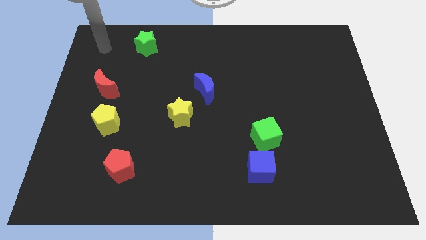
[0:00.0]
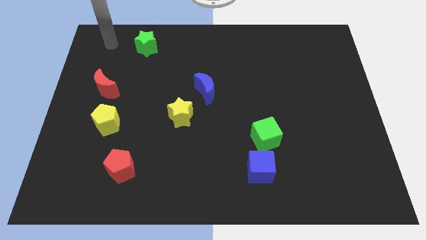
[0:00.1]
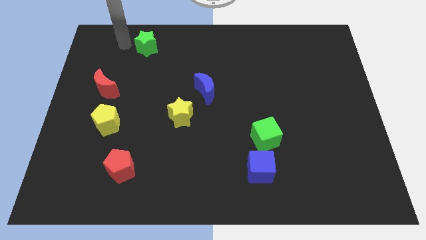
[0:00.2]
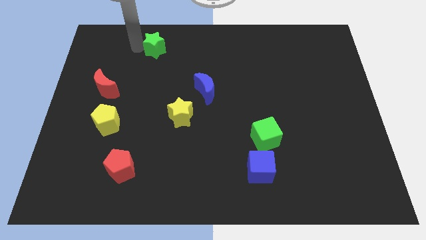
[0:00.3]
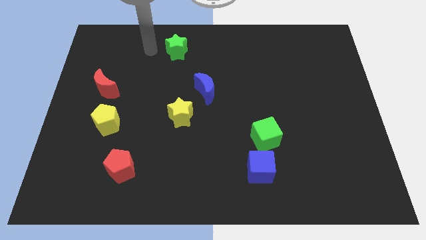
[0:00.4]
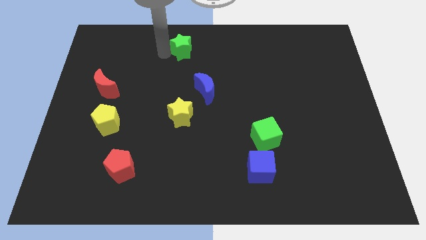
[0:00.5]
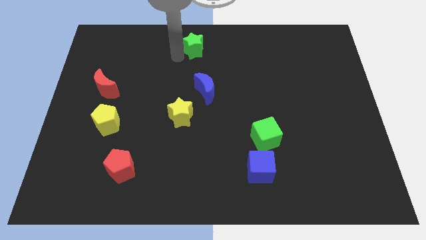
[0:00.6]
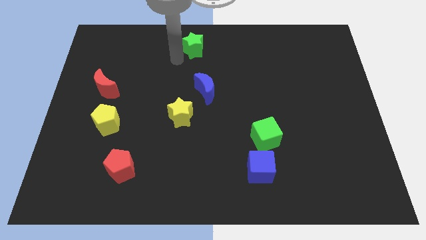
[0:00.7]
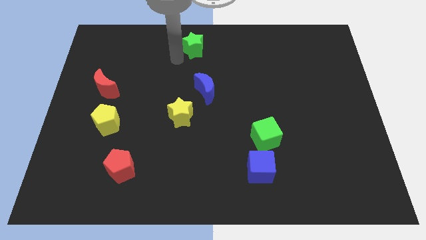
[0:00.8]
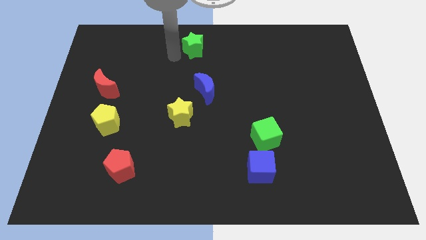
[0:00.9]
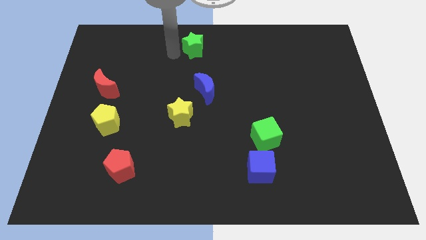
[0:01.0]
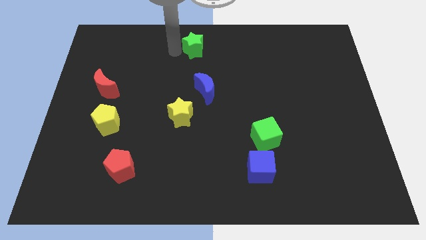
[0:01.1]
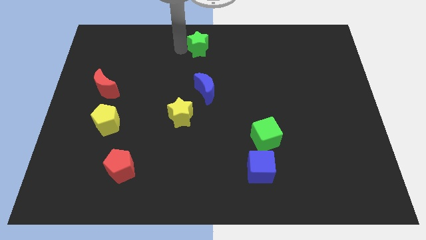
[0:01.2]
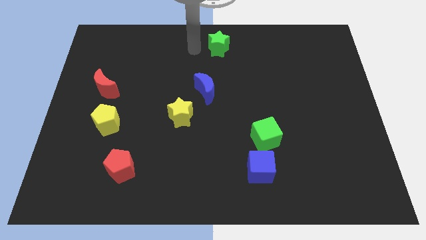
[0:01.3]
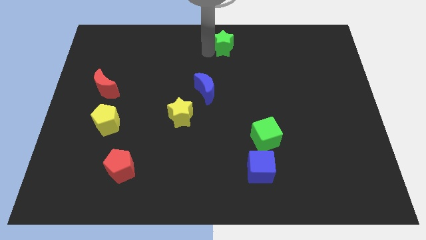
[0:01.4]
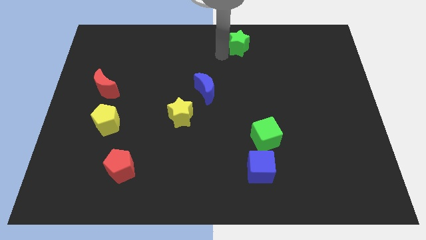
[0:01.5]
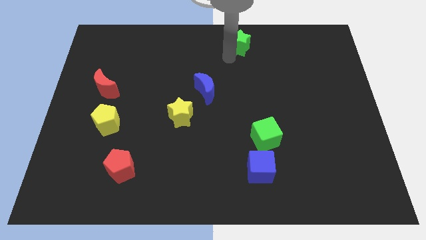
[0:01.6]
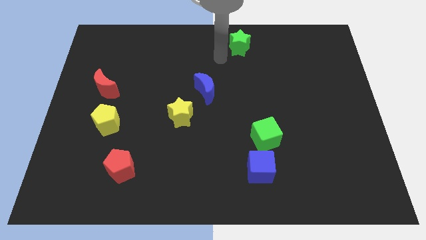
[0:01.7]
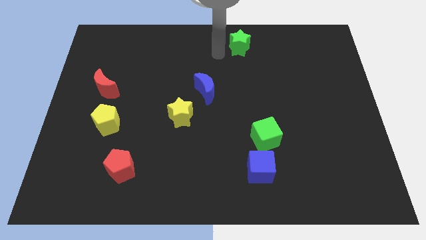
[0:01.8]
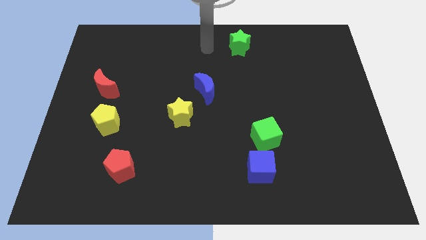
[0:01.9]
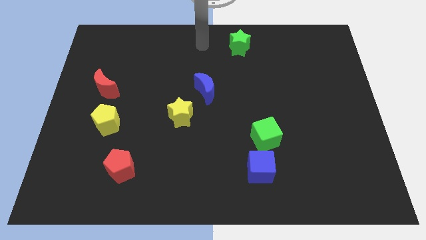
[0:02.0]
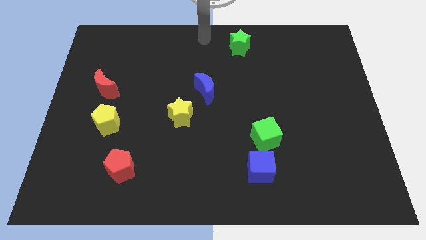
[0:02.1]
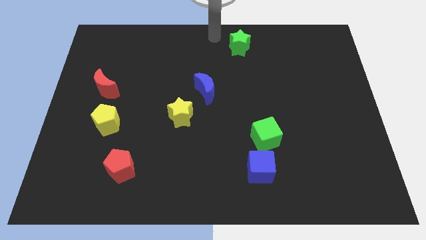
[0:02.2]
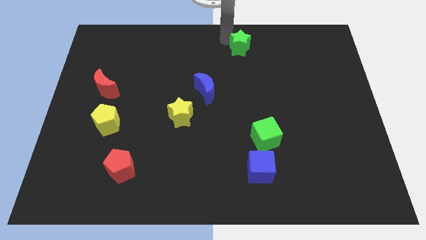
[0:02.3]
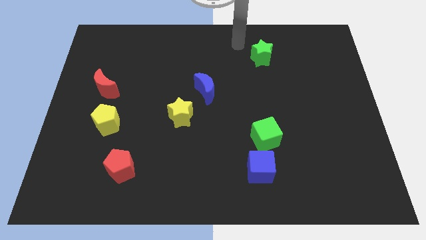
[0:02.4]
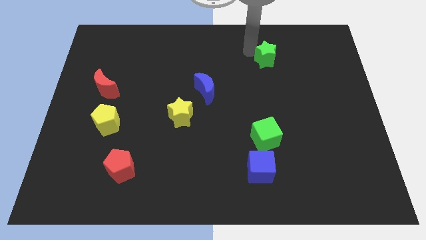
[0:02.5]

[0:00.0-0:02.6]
push the green star vertically above the green cube

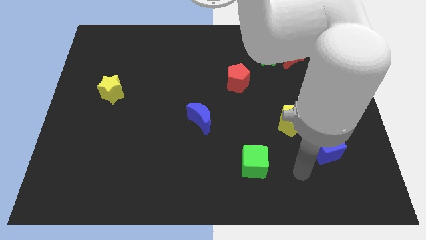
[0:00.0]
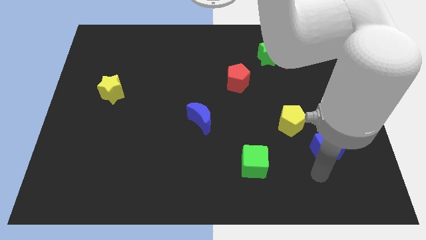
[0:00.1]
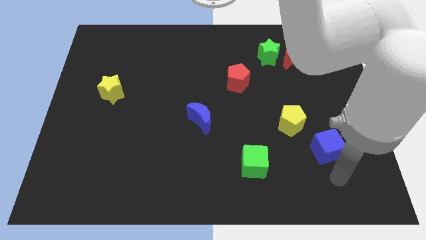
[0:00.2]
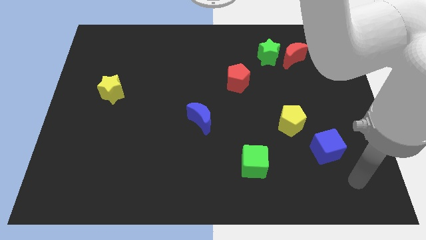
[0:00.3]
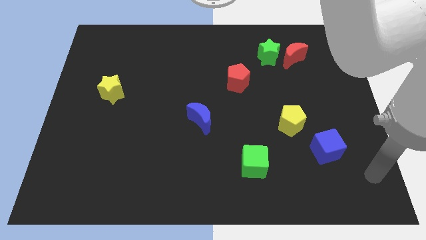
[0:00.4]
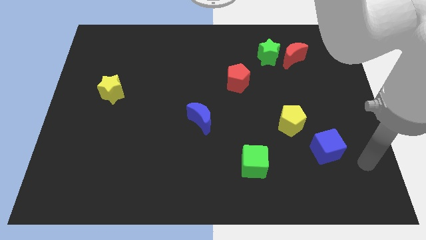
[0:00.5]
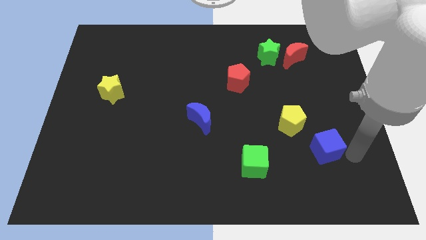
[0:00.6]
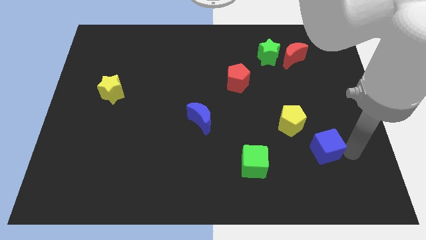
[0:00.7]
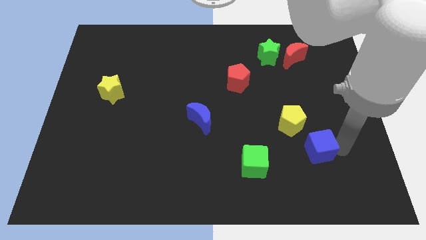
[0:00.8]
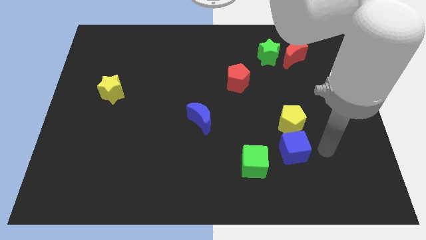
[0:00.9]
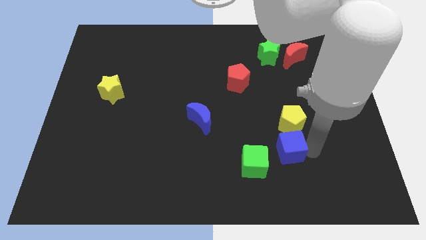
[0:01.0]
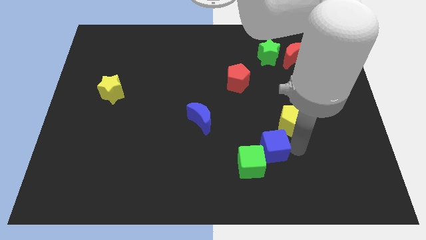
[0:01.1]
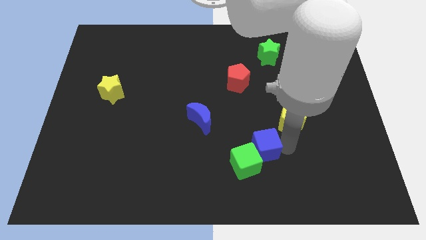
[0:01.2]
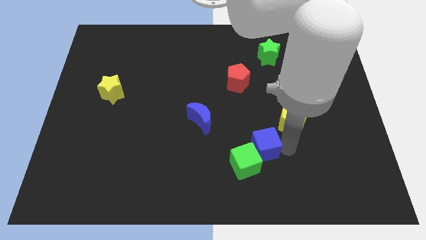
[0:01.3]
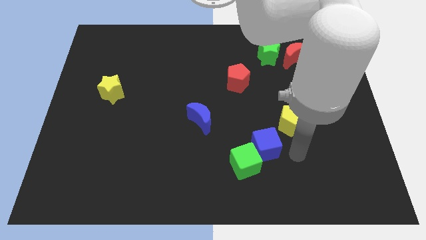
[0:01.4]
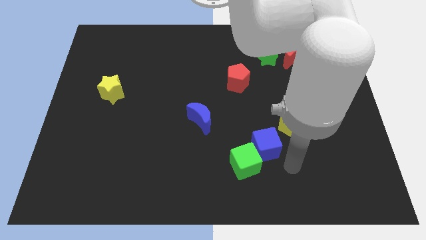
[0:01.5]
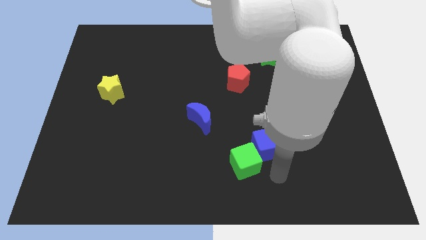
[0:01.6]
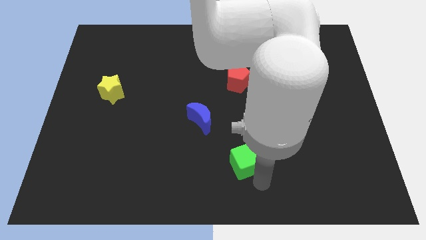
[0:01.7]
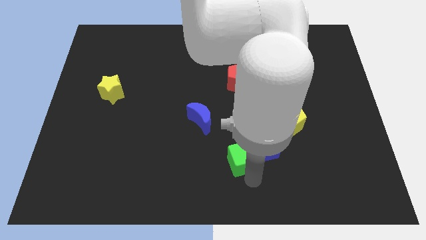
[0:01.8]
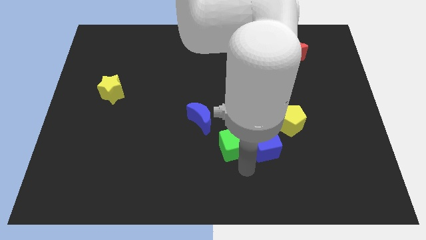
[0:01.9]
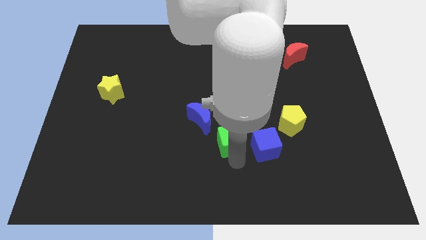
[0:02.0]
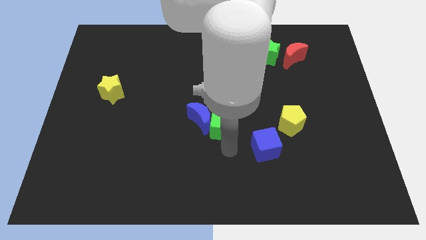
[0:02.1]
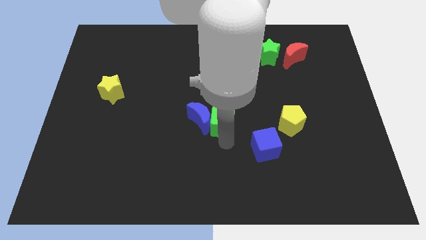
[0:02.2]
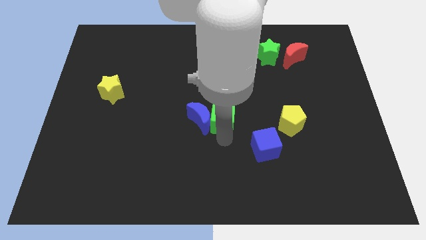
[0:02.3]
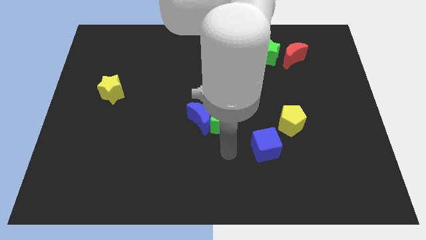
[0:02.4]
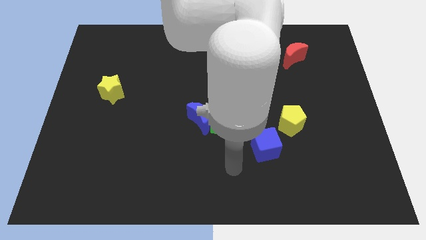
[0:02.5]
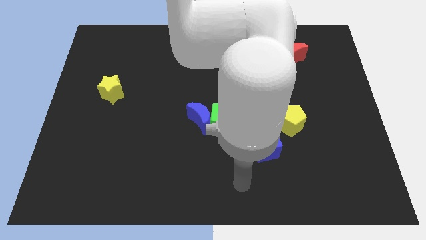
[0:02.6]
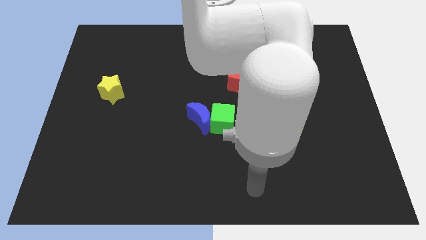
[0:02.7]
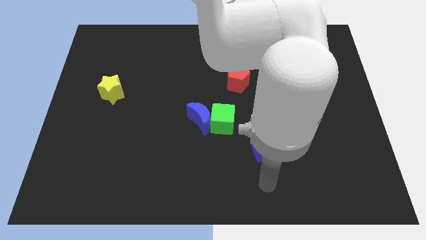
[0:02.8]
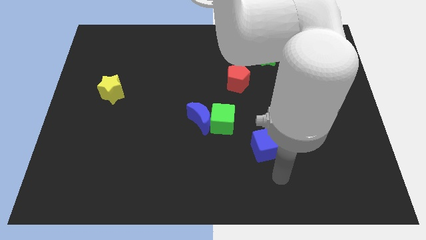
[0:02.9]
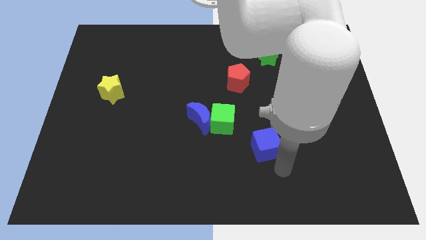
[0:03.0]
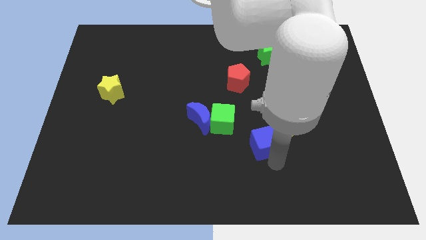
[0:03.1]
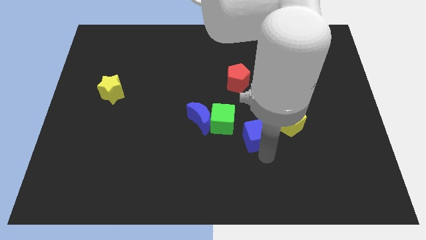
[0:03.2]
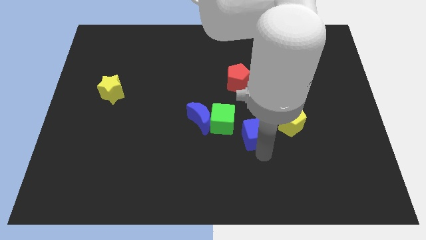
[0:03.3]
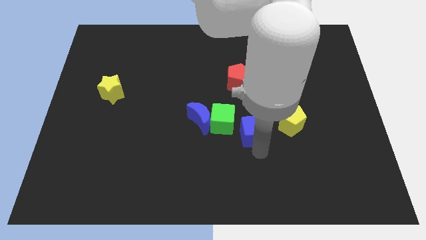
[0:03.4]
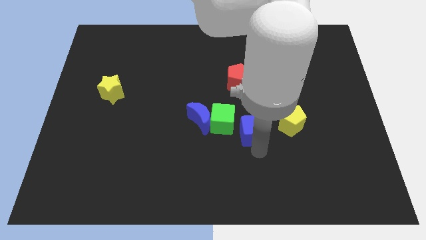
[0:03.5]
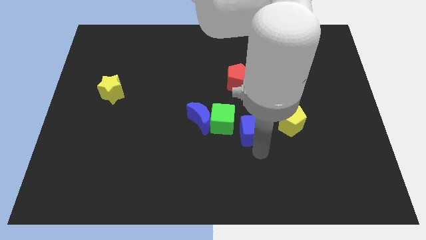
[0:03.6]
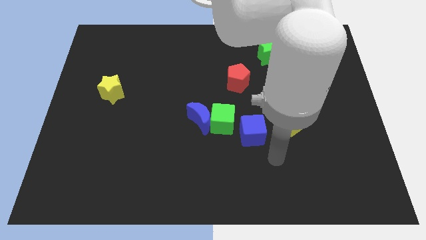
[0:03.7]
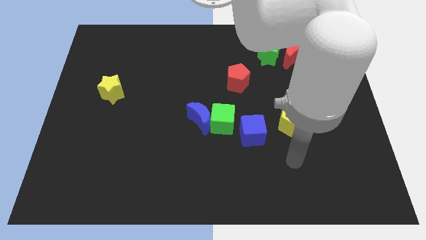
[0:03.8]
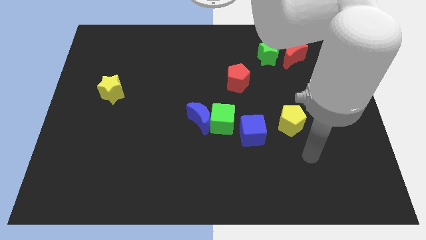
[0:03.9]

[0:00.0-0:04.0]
move the blue cube and green cube to the center

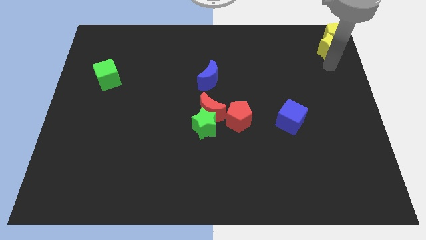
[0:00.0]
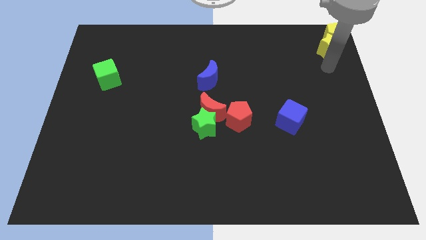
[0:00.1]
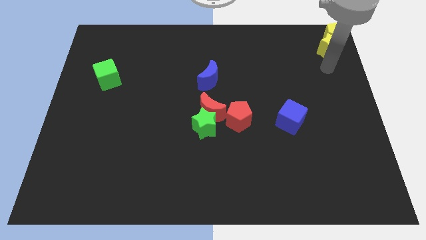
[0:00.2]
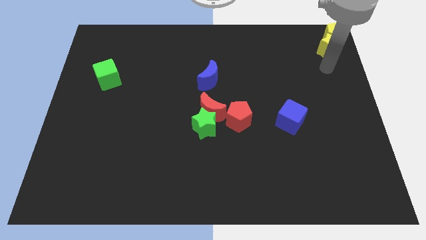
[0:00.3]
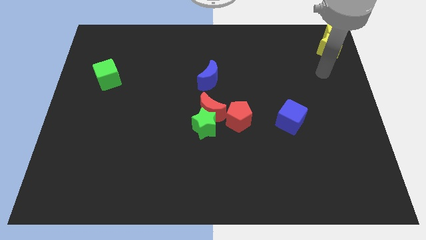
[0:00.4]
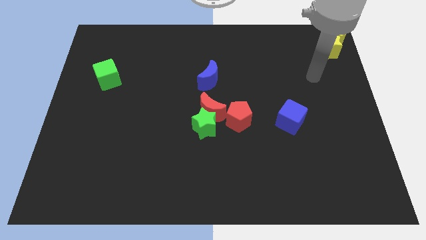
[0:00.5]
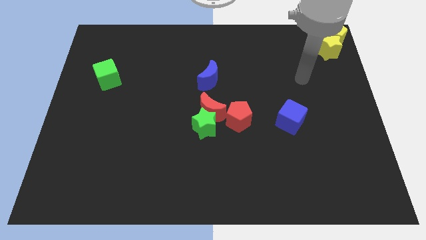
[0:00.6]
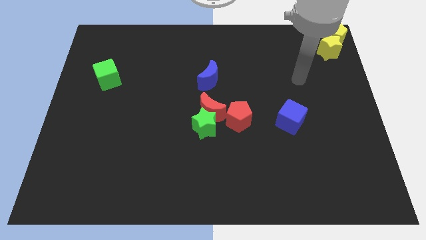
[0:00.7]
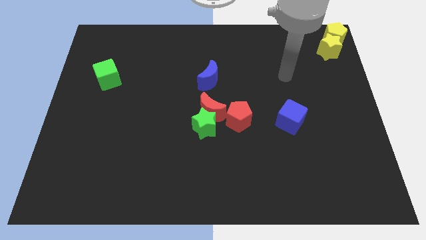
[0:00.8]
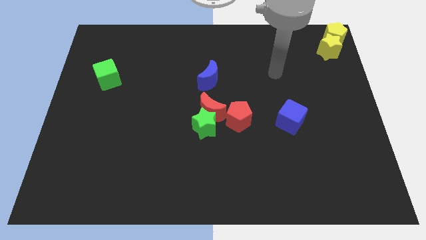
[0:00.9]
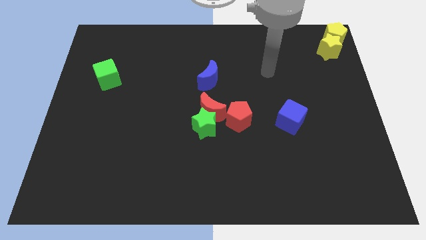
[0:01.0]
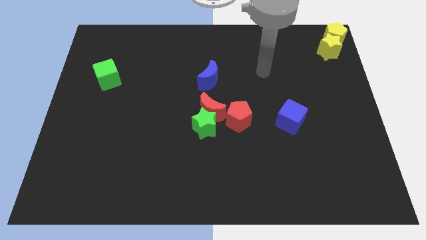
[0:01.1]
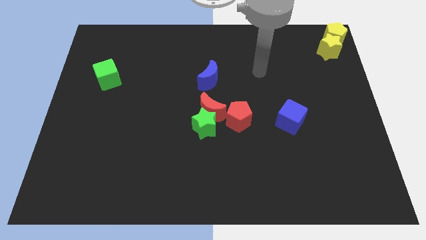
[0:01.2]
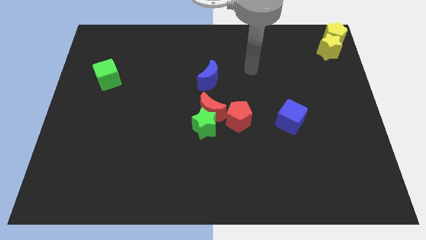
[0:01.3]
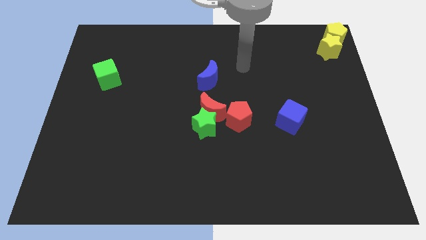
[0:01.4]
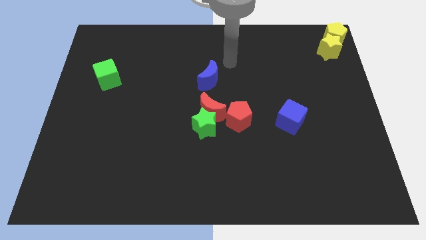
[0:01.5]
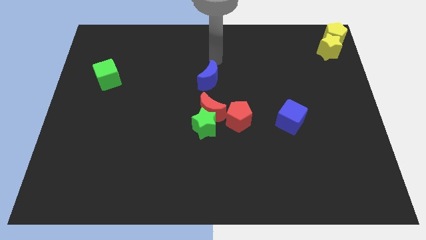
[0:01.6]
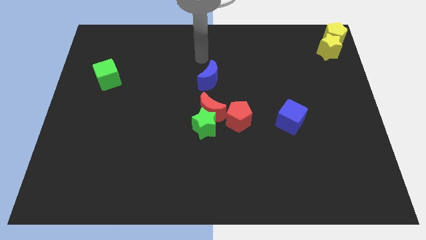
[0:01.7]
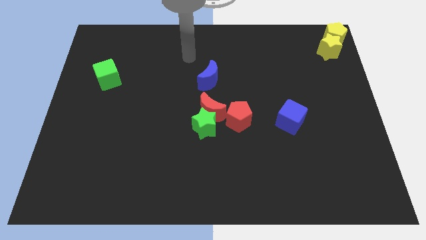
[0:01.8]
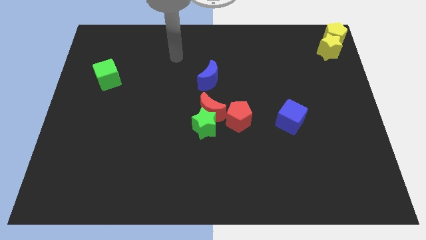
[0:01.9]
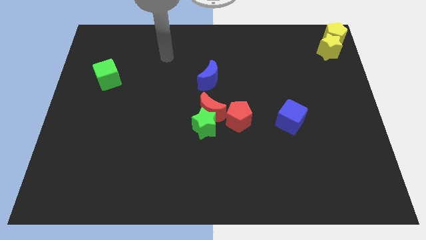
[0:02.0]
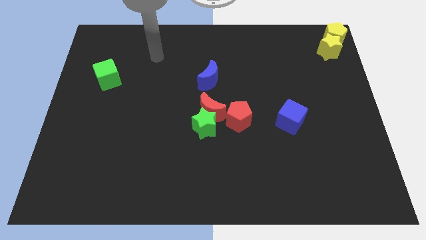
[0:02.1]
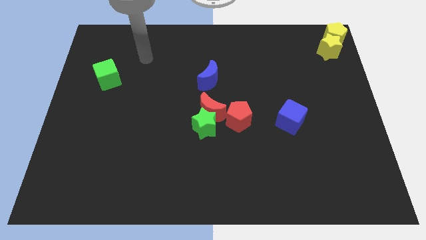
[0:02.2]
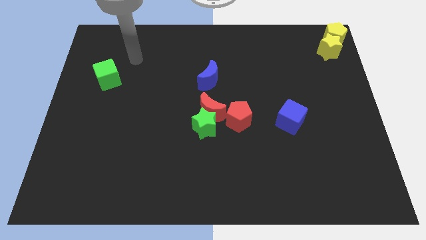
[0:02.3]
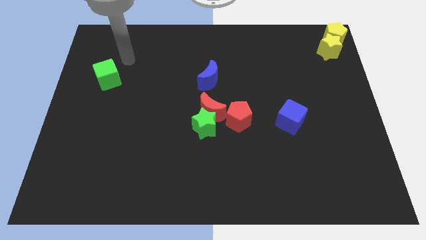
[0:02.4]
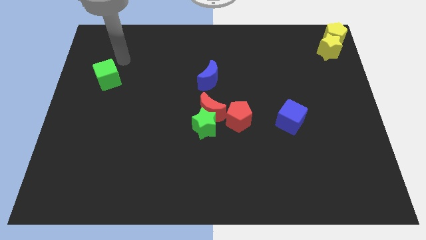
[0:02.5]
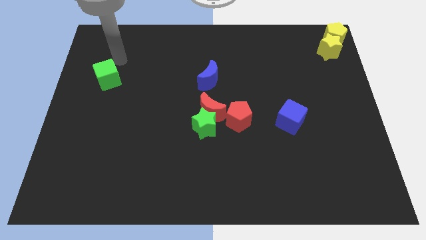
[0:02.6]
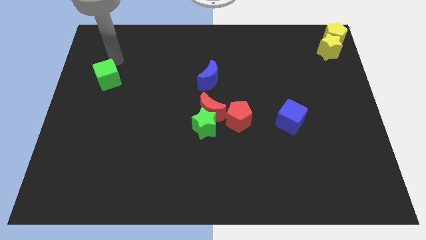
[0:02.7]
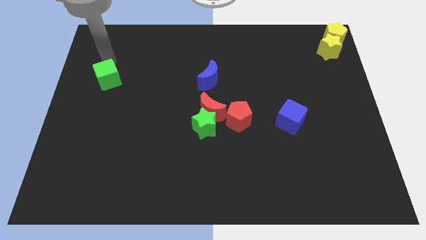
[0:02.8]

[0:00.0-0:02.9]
move your arm from yellow star to the green cube
